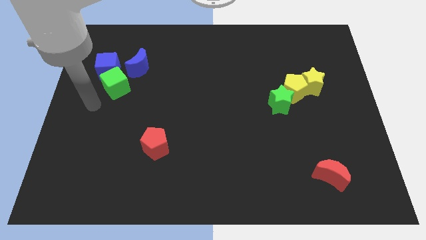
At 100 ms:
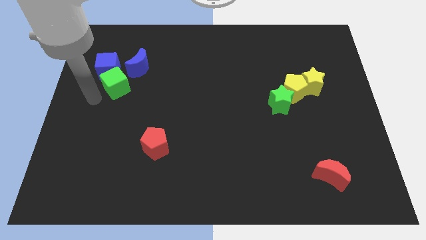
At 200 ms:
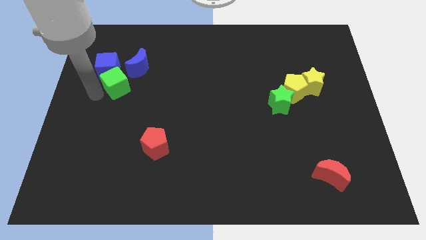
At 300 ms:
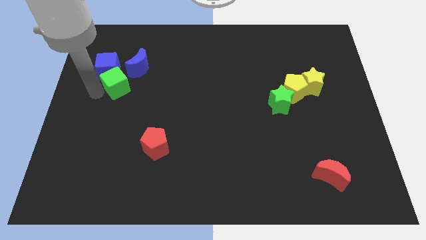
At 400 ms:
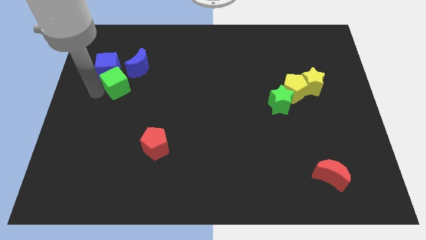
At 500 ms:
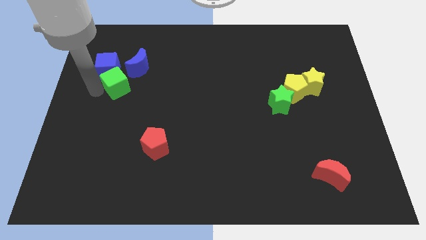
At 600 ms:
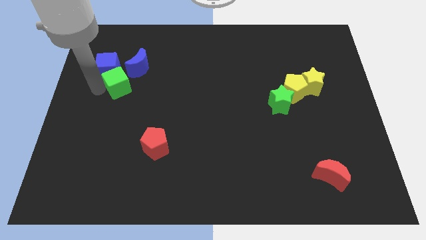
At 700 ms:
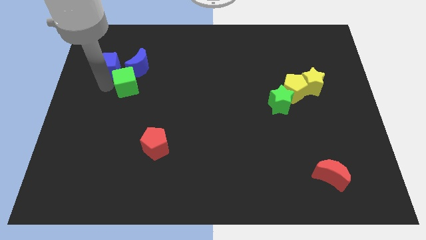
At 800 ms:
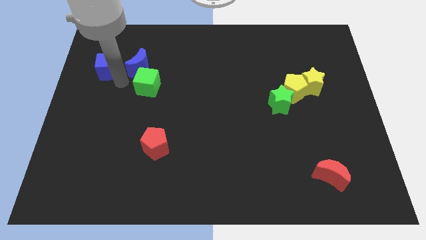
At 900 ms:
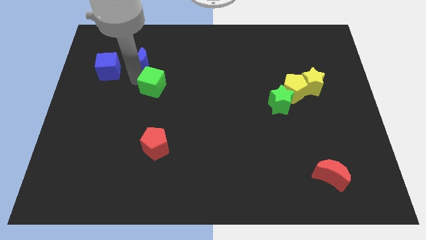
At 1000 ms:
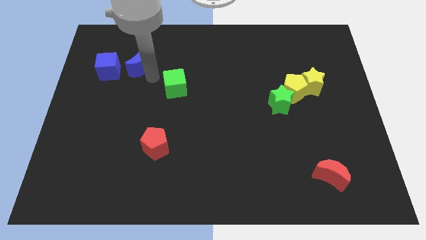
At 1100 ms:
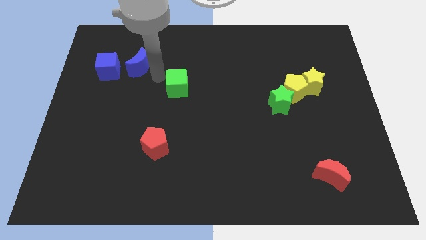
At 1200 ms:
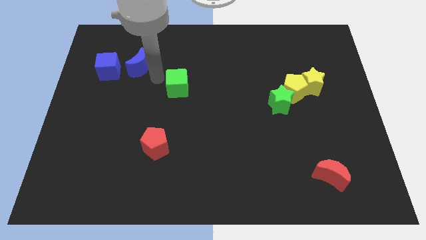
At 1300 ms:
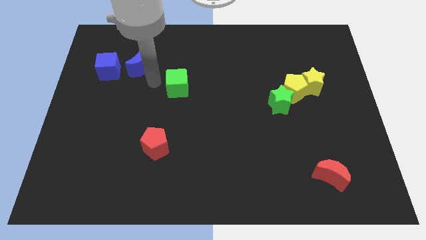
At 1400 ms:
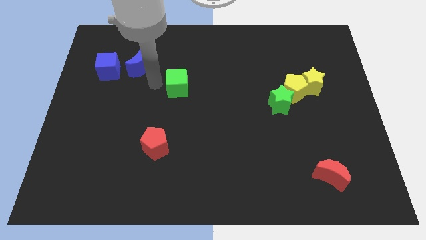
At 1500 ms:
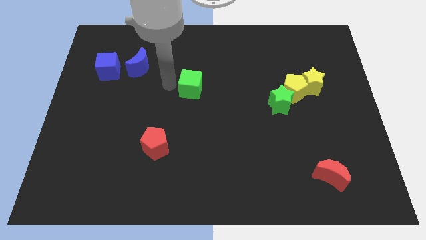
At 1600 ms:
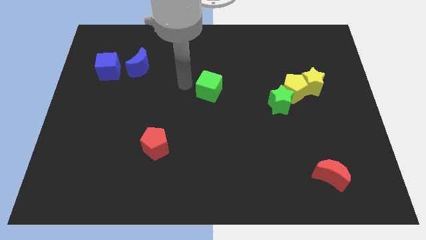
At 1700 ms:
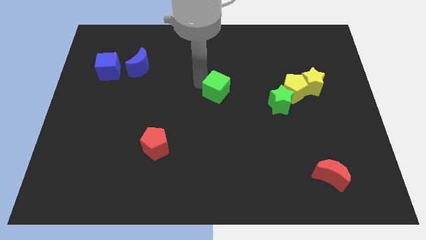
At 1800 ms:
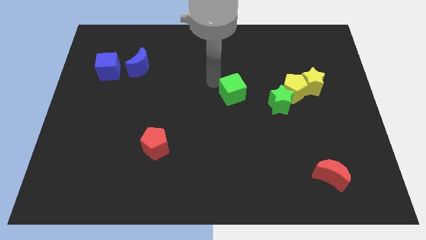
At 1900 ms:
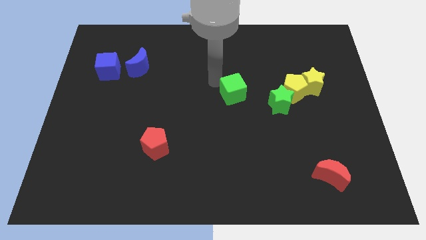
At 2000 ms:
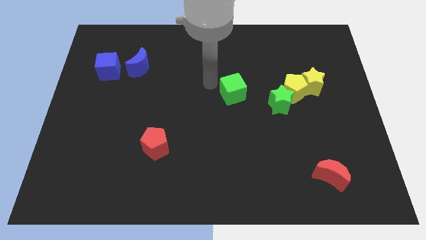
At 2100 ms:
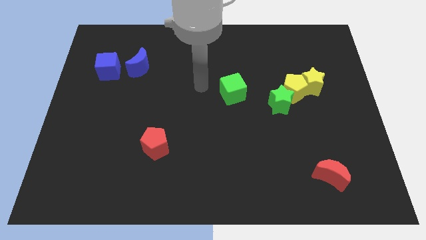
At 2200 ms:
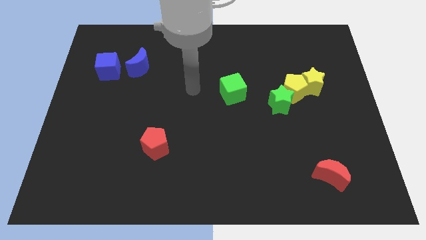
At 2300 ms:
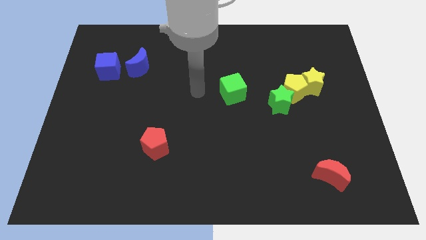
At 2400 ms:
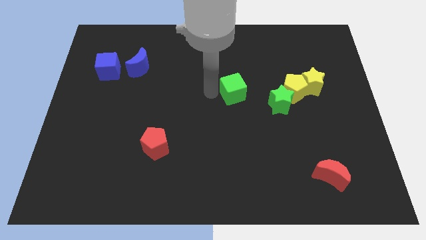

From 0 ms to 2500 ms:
push the green cube to the left of the green star slightly

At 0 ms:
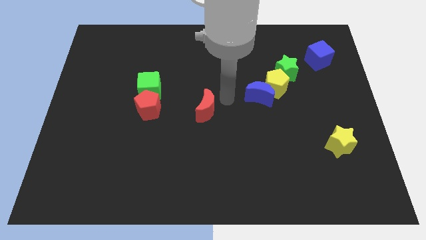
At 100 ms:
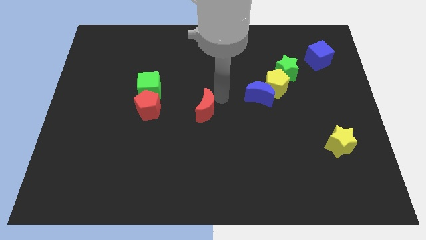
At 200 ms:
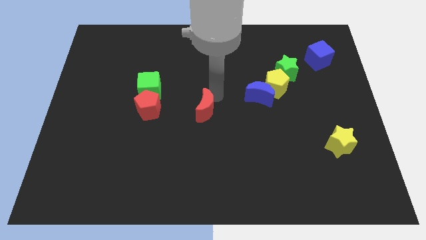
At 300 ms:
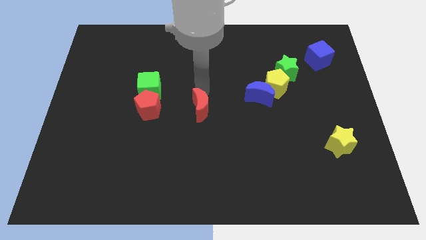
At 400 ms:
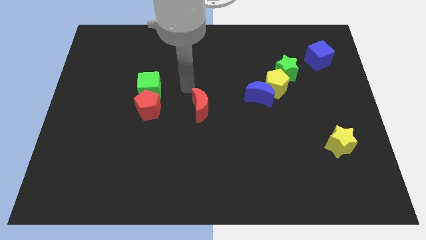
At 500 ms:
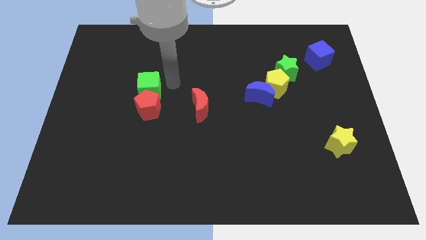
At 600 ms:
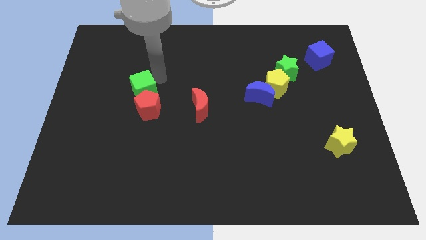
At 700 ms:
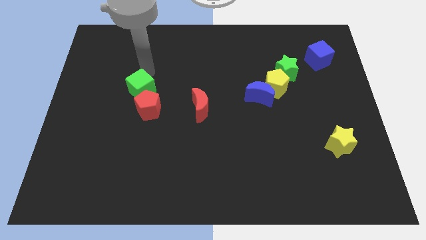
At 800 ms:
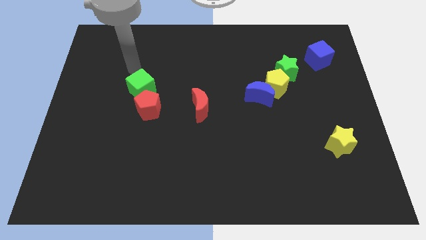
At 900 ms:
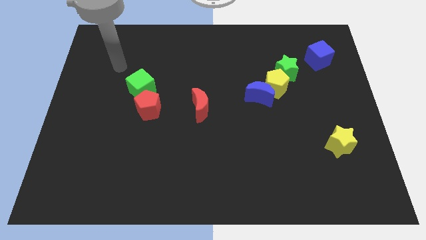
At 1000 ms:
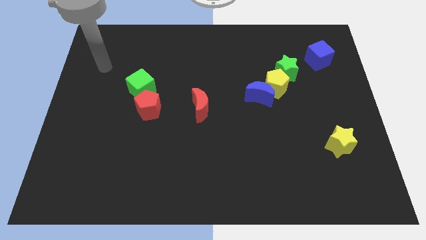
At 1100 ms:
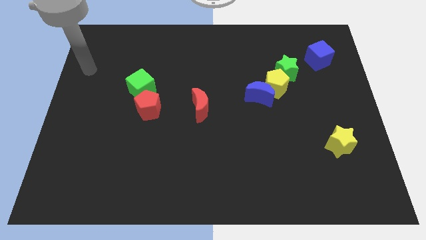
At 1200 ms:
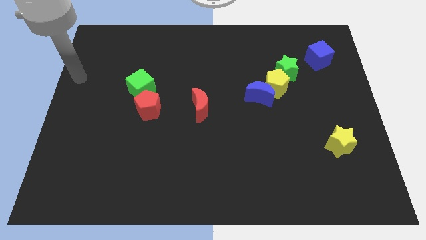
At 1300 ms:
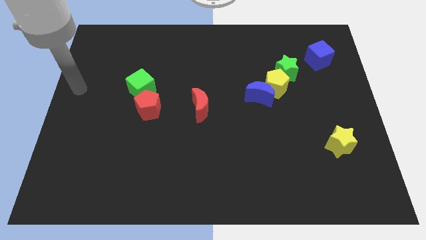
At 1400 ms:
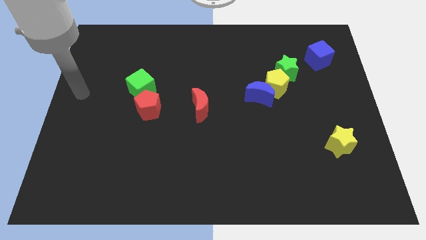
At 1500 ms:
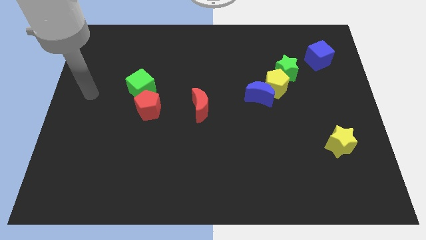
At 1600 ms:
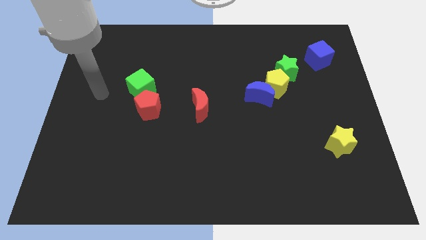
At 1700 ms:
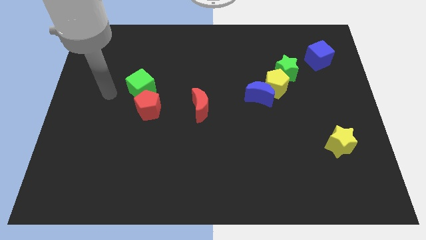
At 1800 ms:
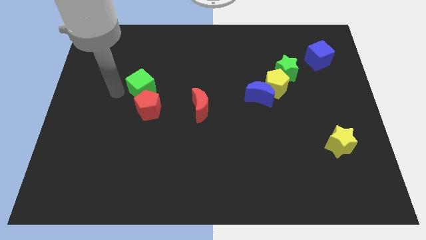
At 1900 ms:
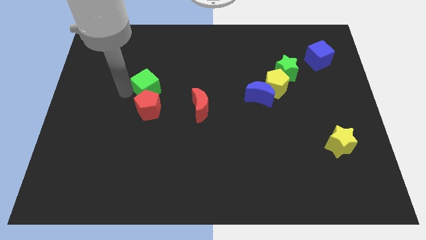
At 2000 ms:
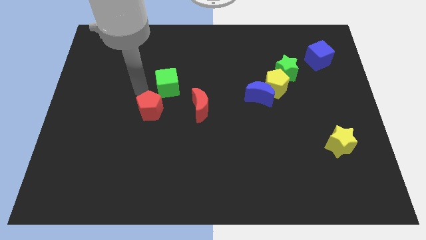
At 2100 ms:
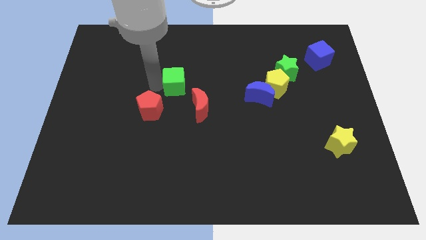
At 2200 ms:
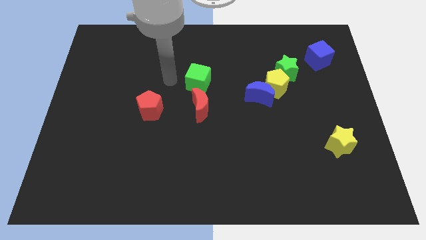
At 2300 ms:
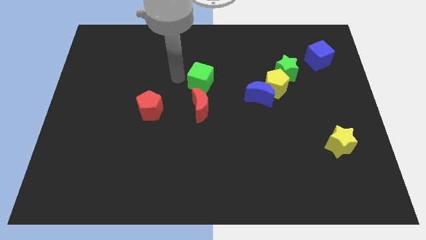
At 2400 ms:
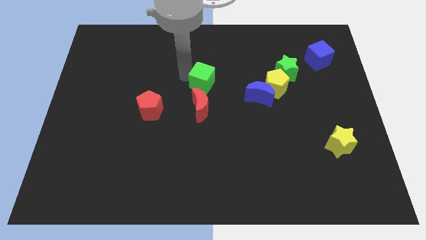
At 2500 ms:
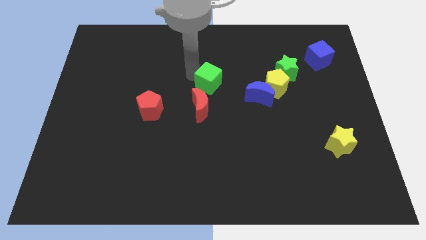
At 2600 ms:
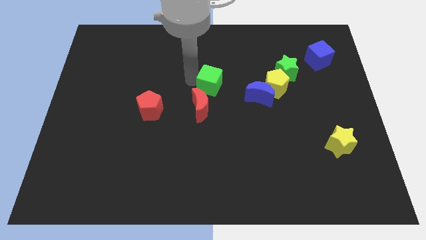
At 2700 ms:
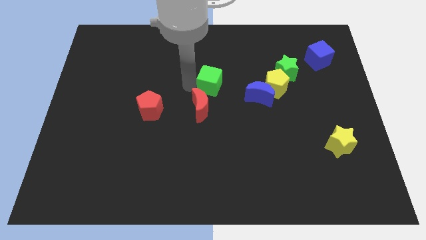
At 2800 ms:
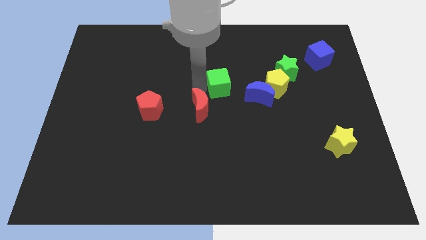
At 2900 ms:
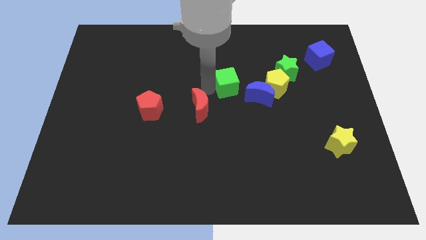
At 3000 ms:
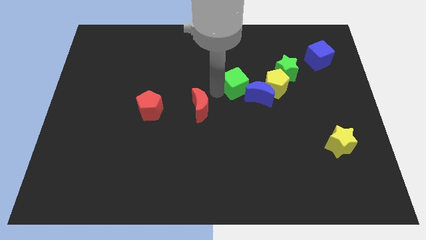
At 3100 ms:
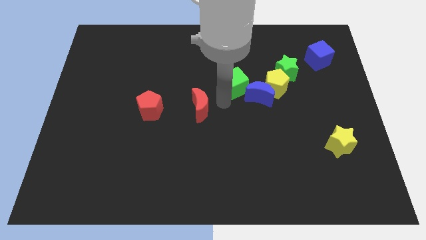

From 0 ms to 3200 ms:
push the green cube close to the left side of the blue moon

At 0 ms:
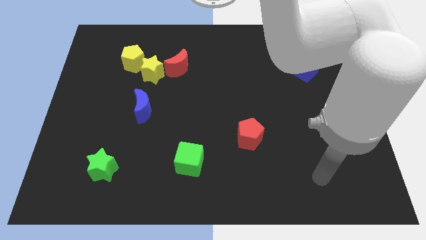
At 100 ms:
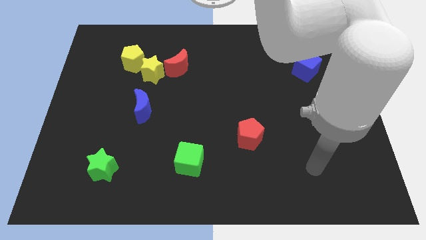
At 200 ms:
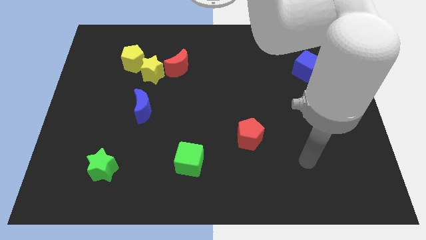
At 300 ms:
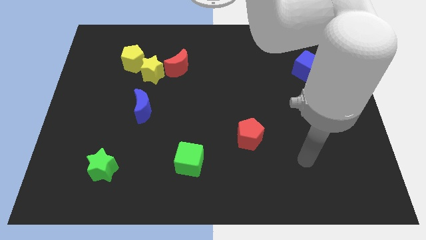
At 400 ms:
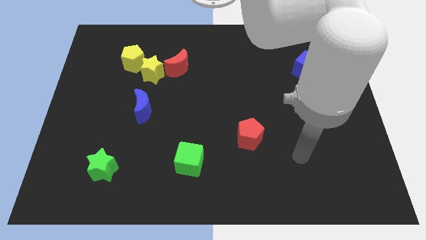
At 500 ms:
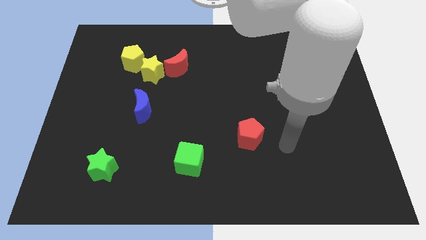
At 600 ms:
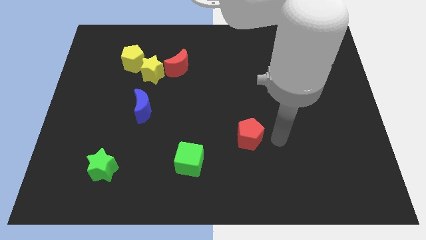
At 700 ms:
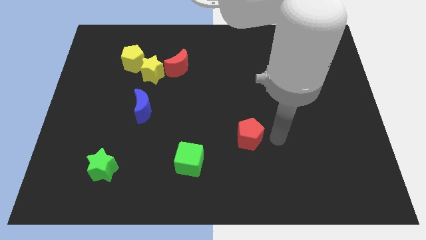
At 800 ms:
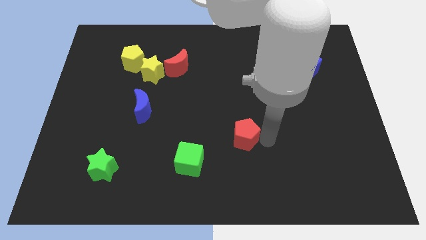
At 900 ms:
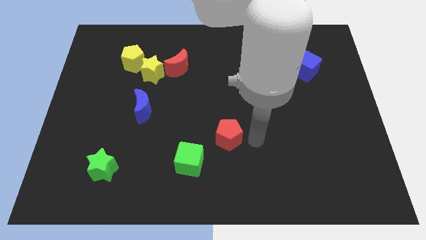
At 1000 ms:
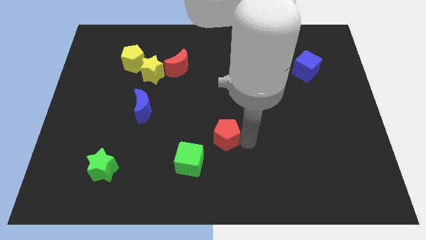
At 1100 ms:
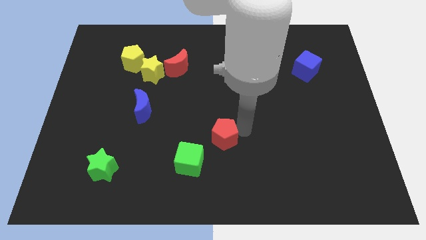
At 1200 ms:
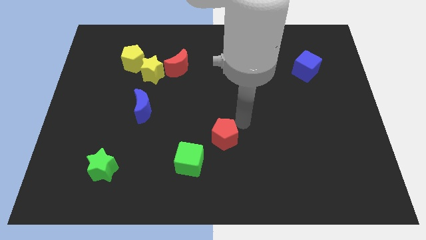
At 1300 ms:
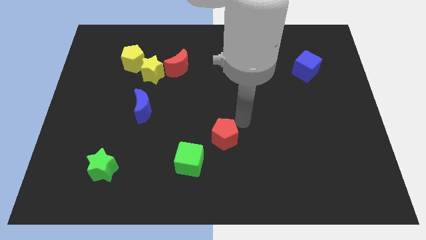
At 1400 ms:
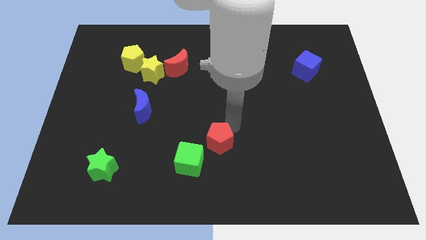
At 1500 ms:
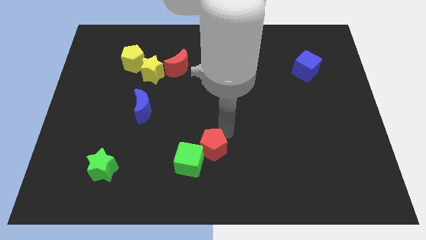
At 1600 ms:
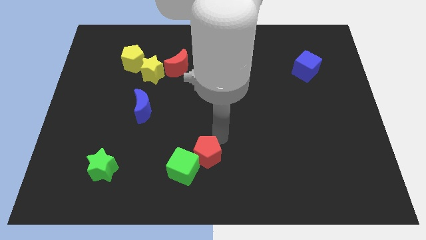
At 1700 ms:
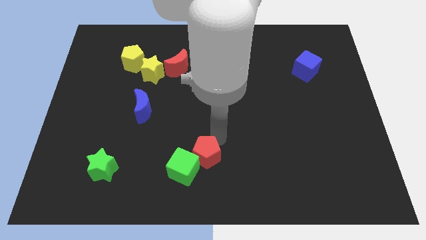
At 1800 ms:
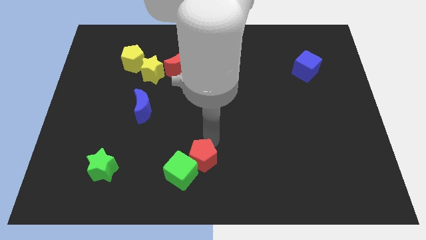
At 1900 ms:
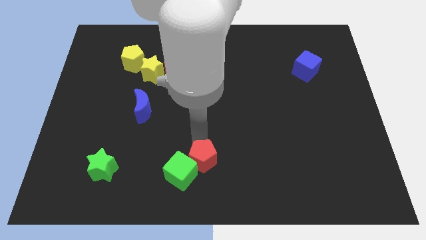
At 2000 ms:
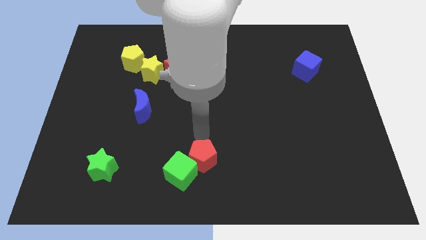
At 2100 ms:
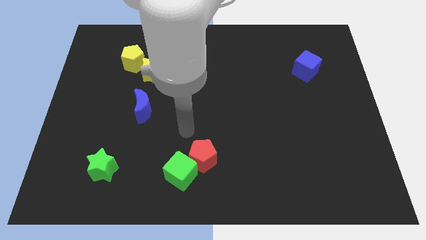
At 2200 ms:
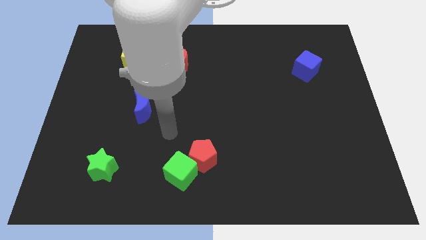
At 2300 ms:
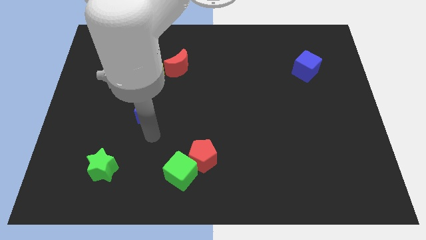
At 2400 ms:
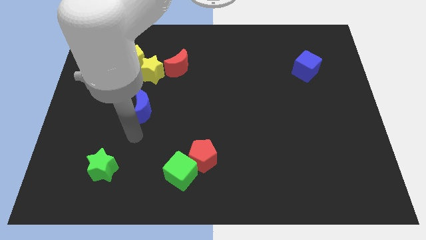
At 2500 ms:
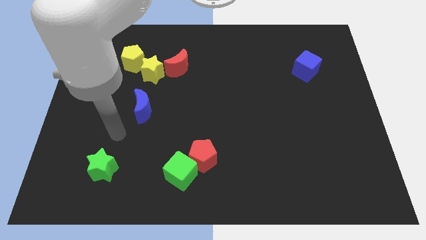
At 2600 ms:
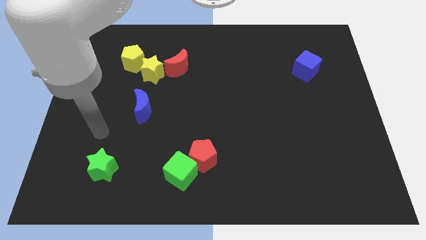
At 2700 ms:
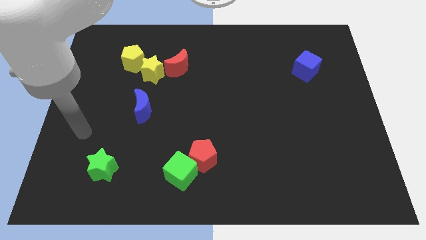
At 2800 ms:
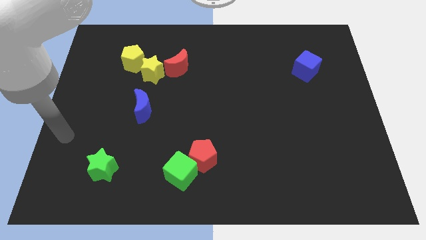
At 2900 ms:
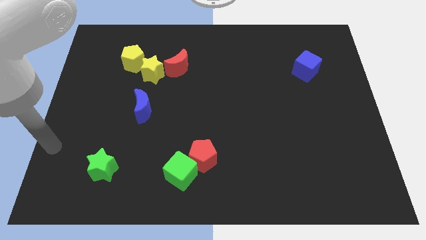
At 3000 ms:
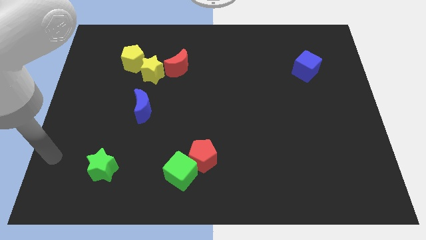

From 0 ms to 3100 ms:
slide red pentagon into green cube
